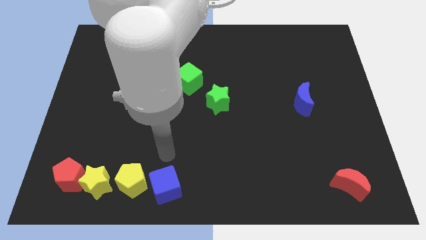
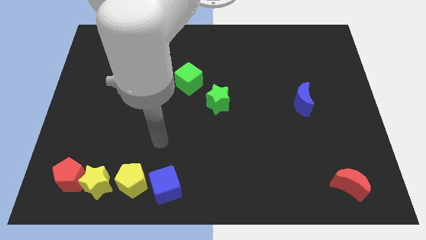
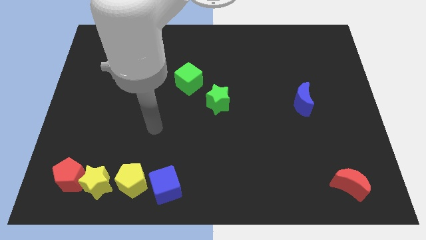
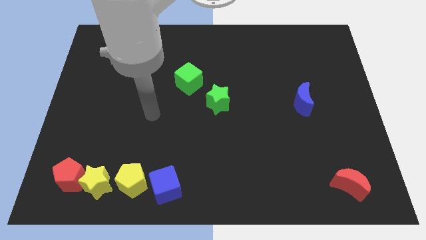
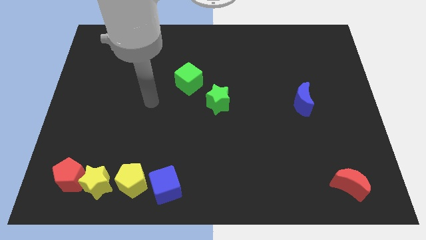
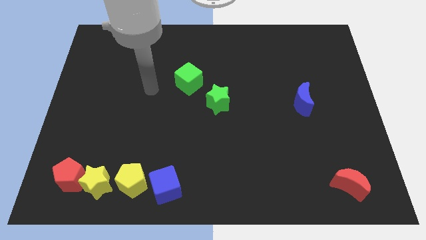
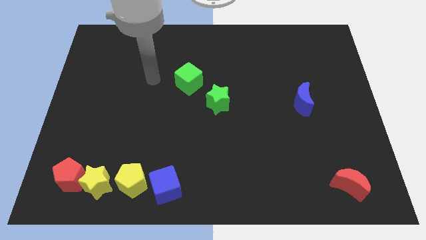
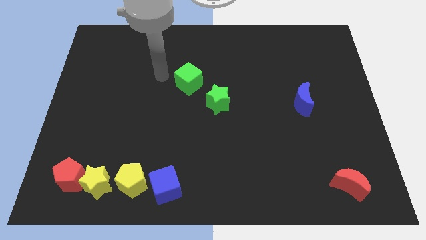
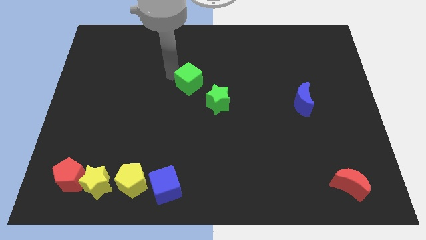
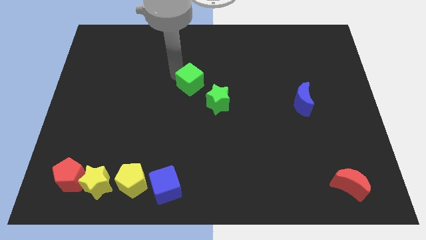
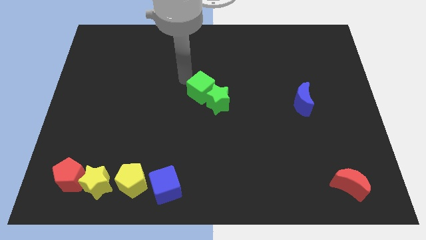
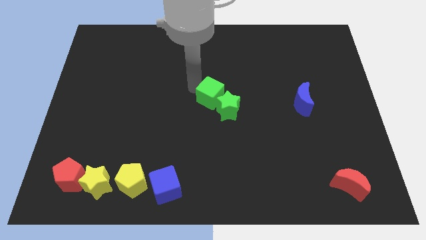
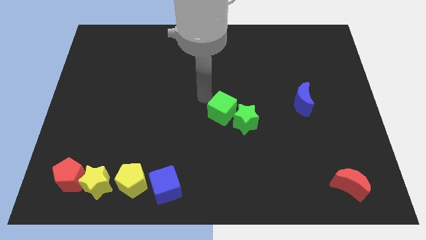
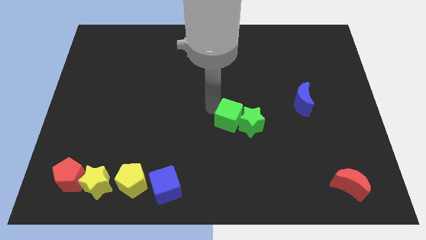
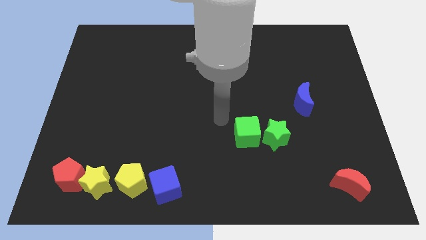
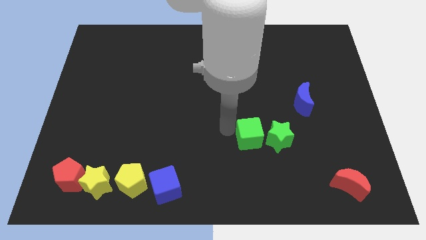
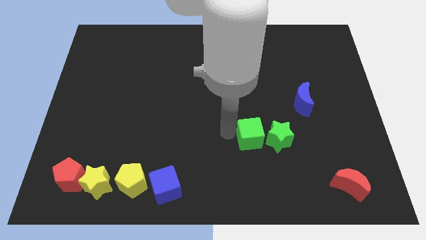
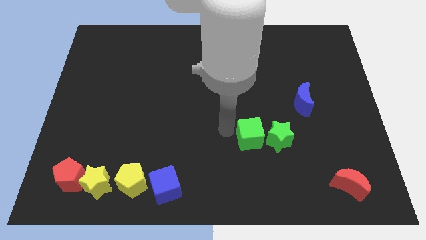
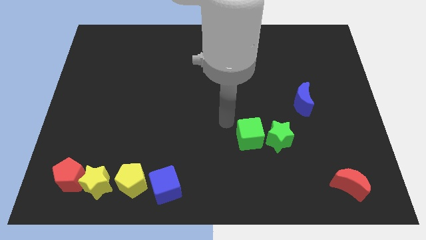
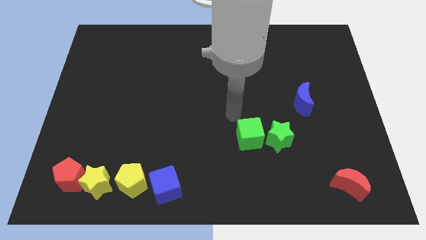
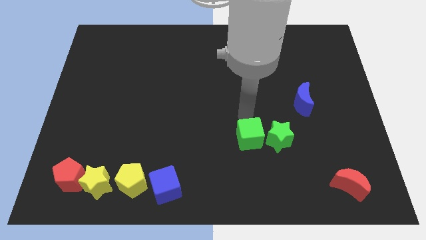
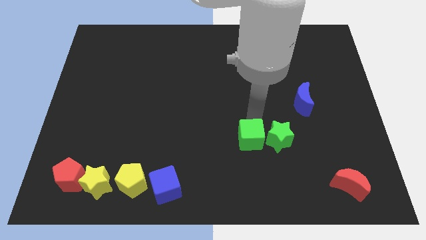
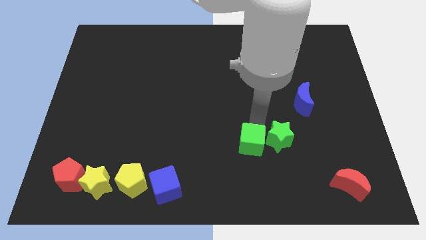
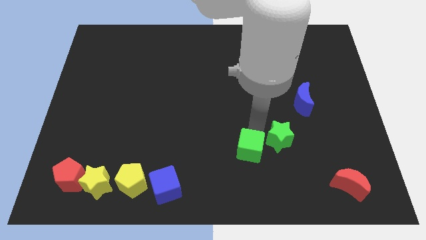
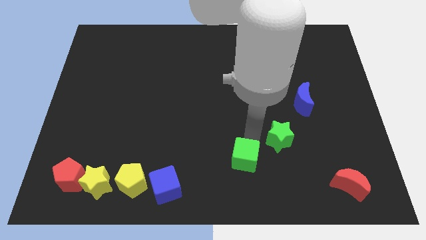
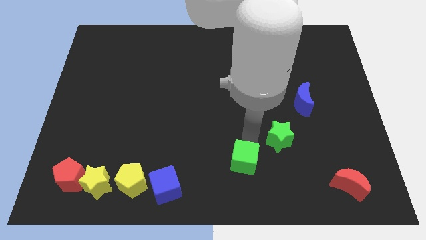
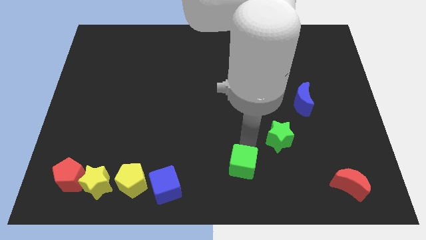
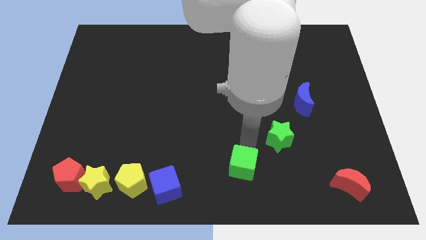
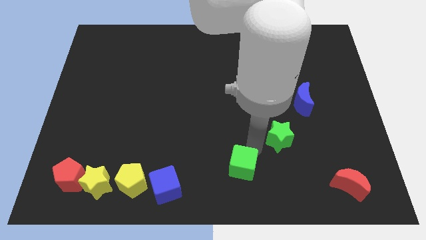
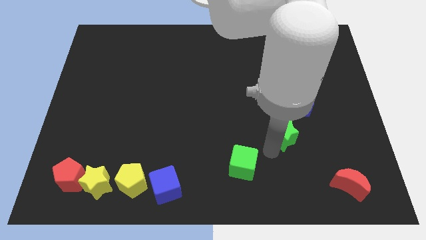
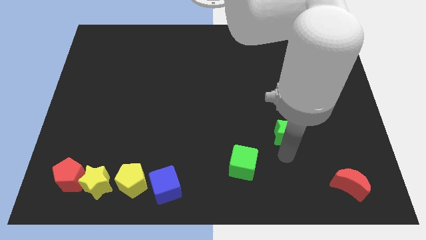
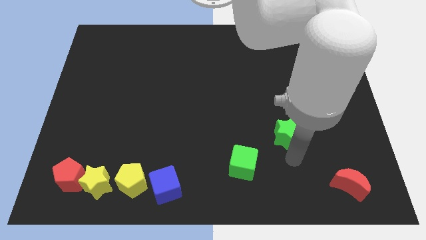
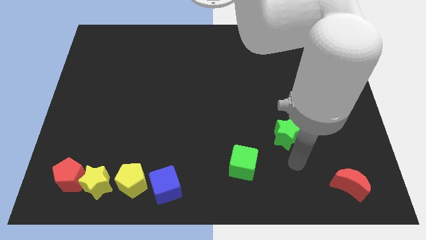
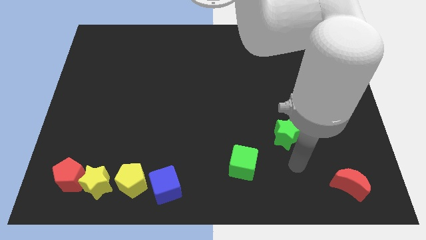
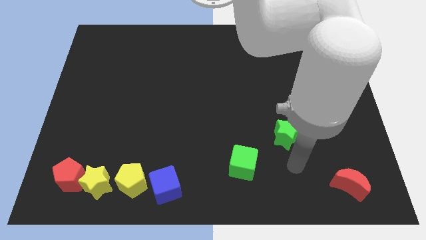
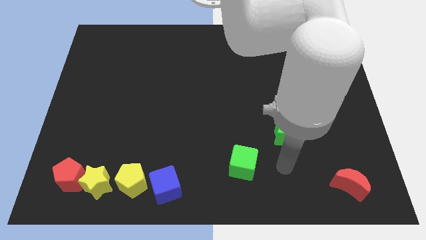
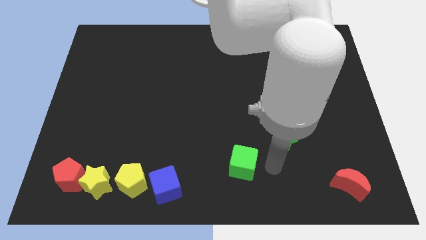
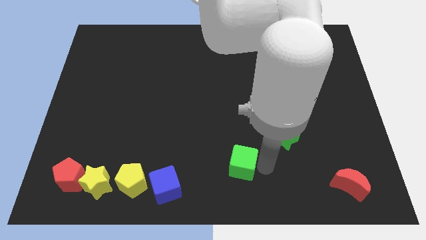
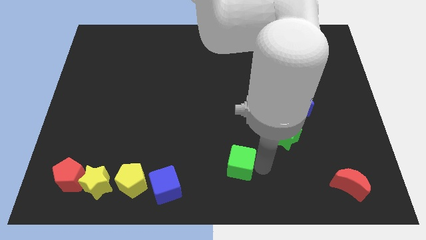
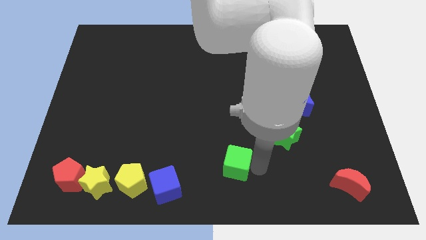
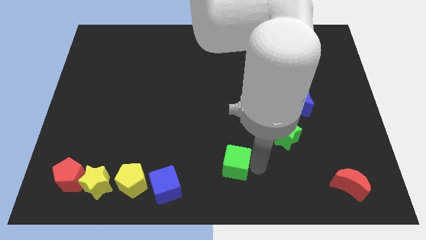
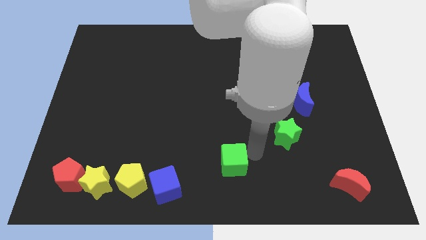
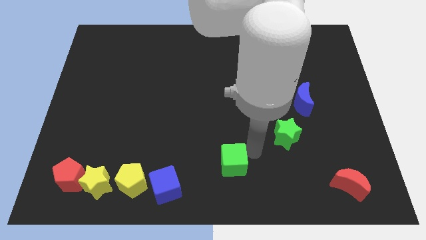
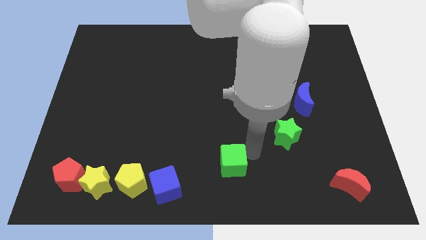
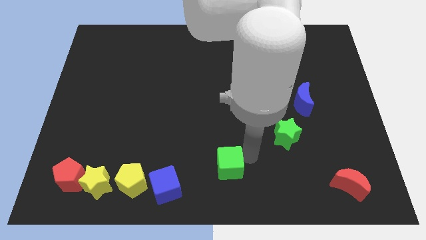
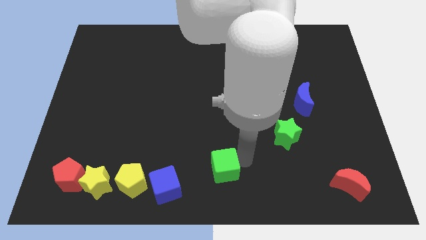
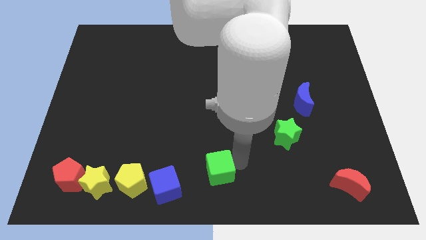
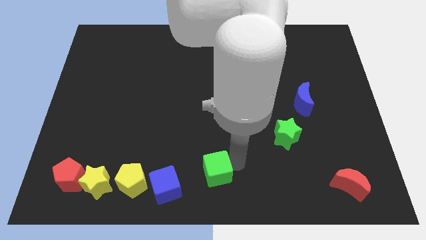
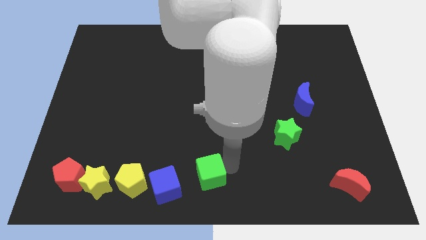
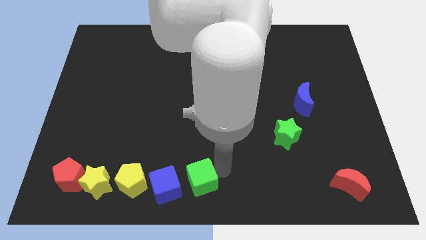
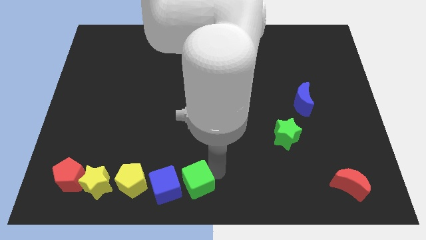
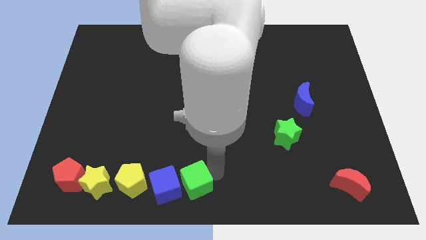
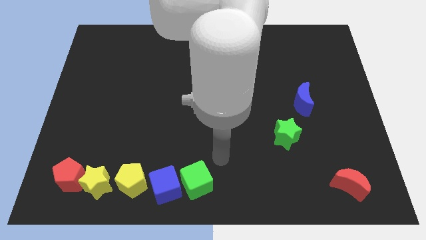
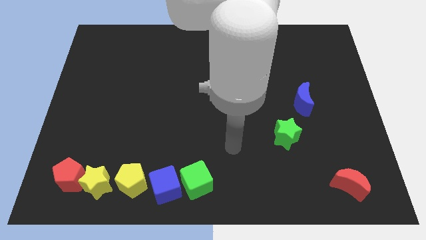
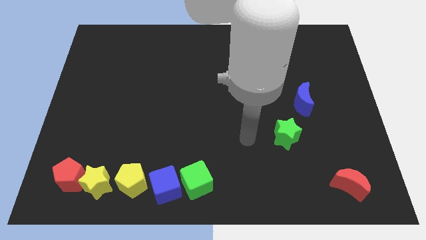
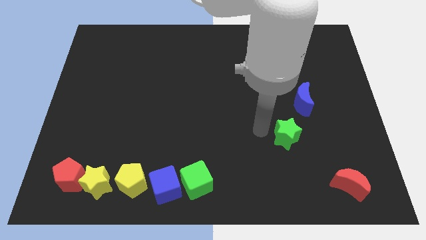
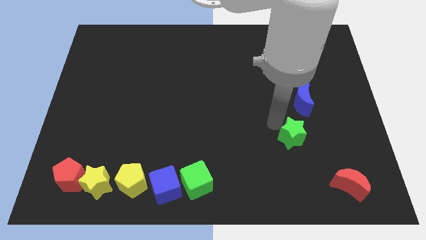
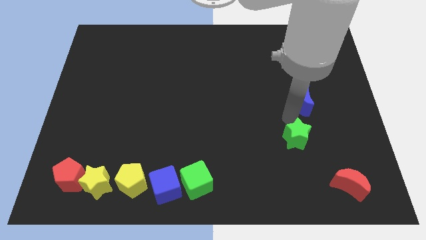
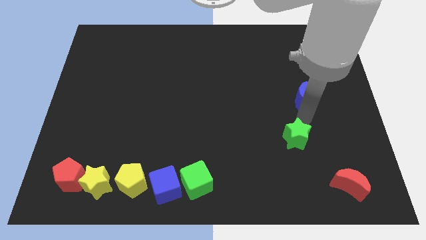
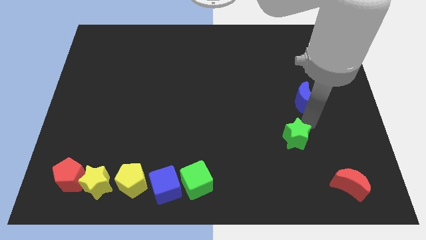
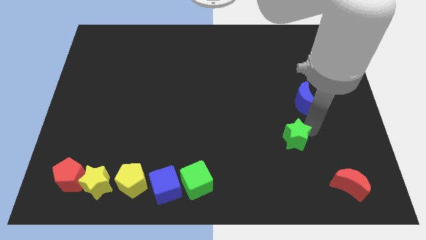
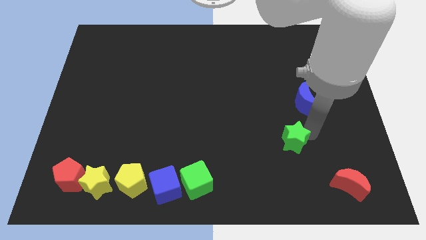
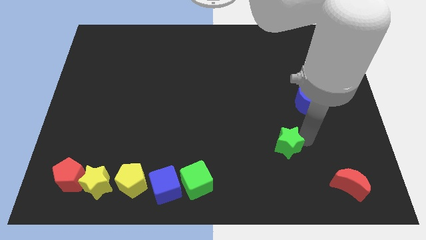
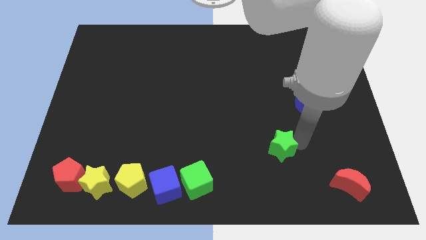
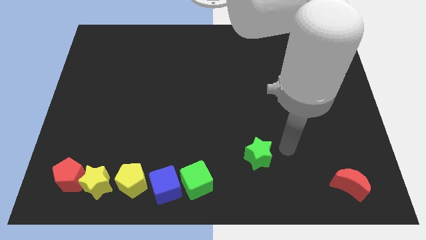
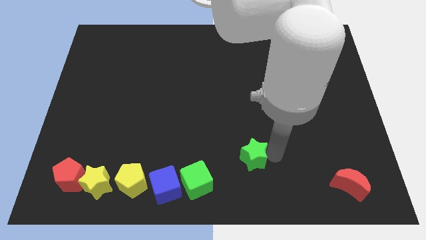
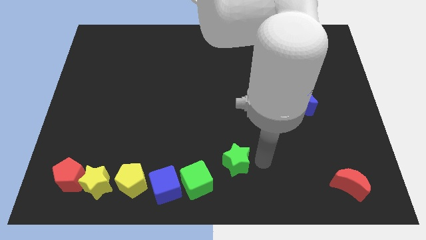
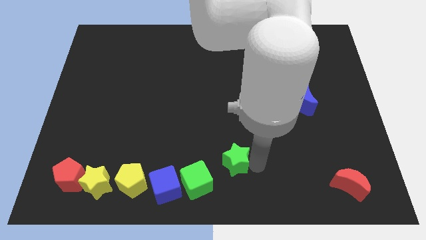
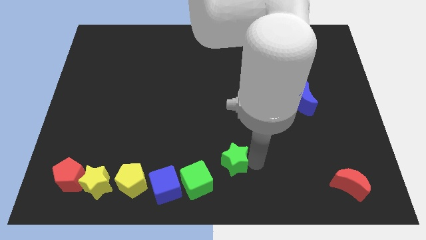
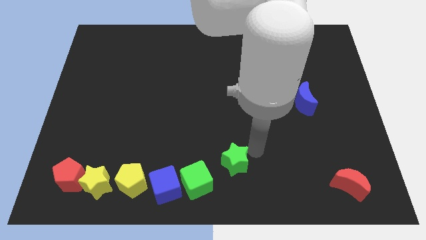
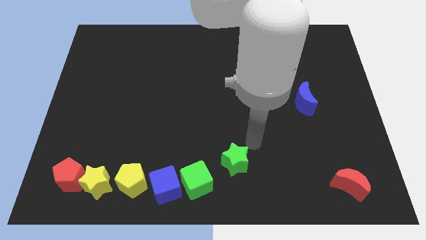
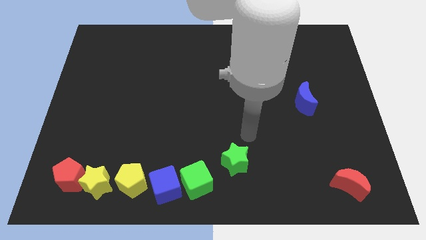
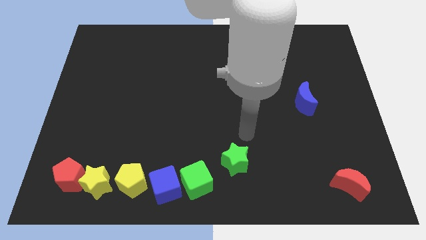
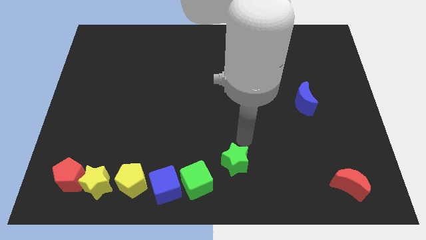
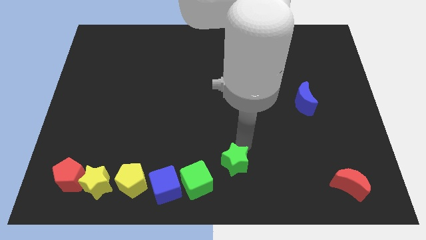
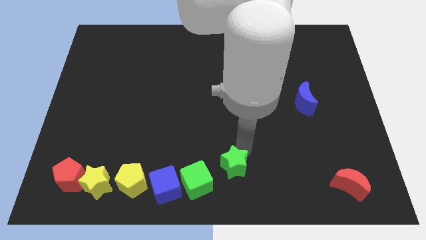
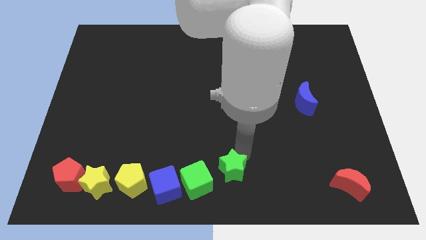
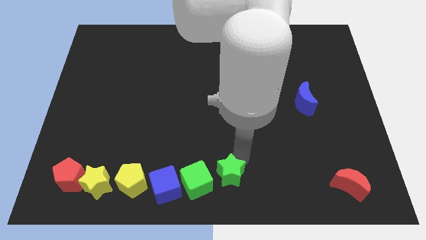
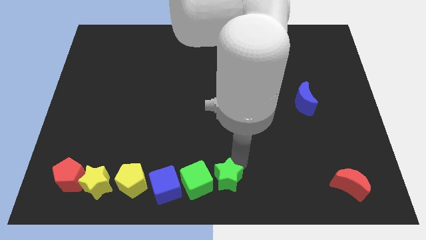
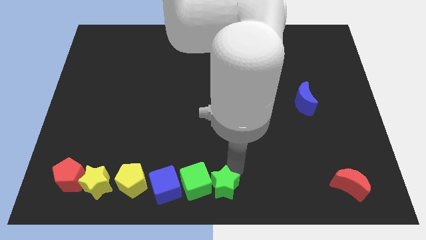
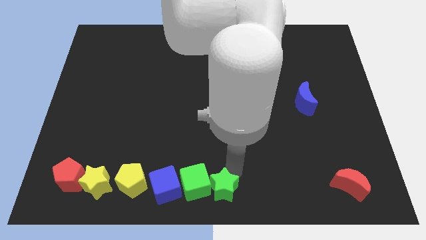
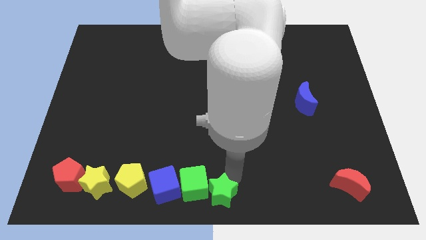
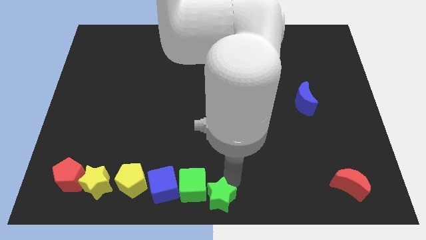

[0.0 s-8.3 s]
drag the green blocks into the right side of the blue cube

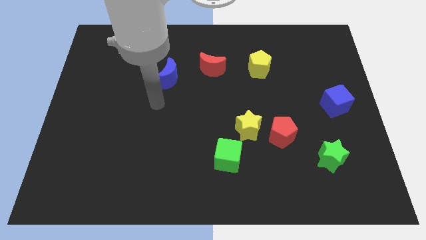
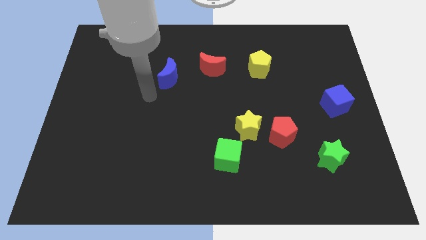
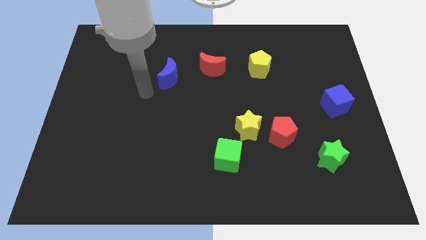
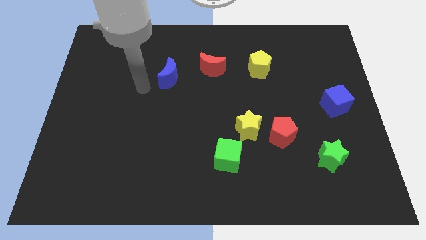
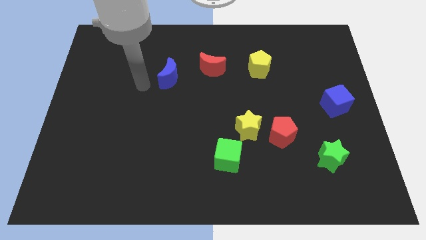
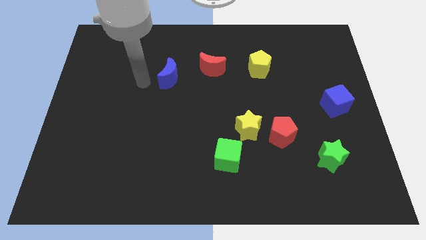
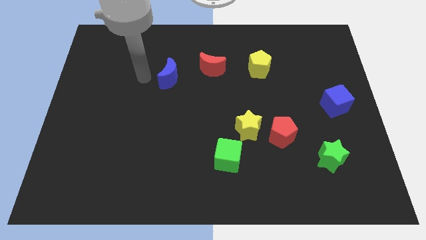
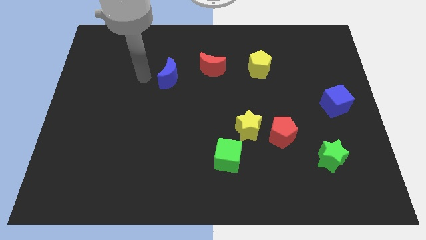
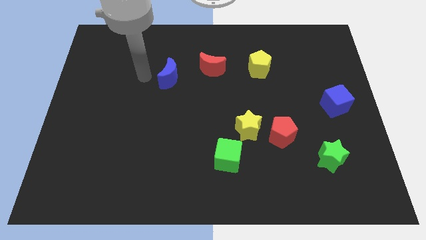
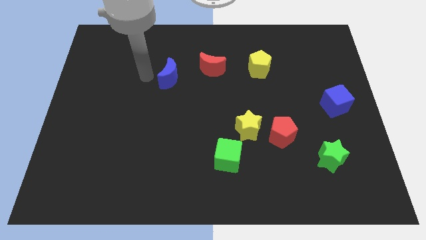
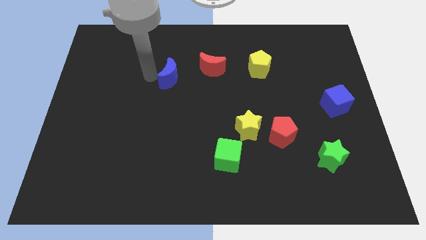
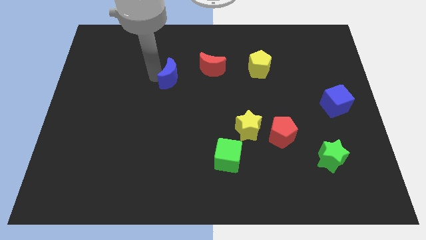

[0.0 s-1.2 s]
touch at the left side of the blue crescent
